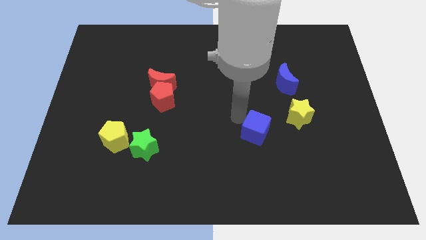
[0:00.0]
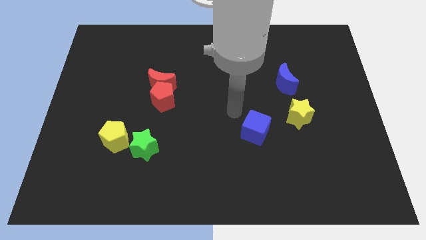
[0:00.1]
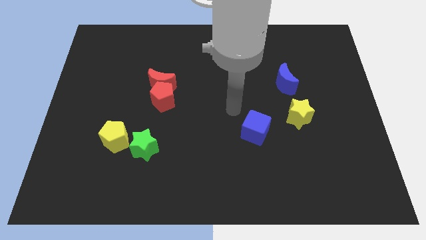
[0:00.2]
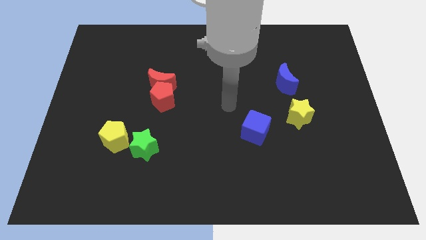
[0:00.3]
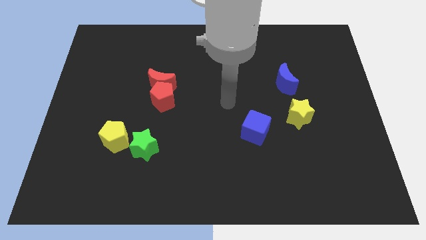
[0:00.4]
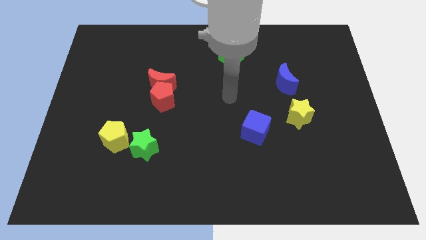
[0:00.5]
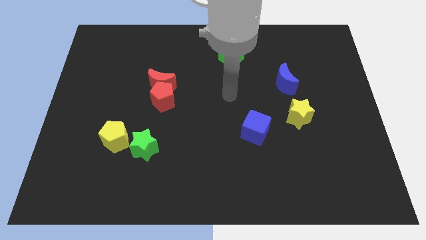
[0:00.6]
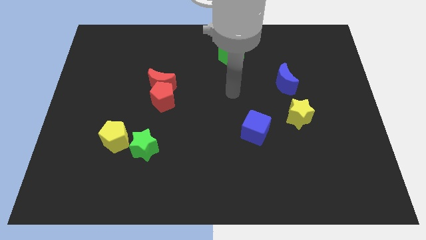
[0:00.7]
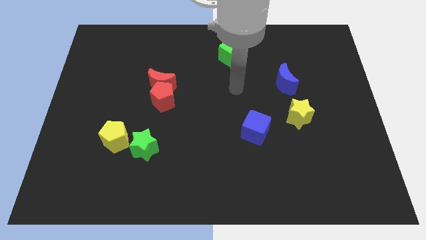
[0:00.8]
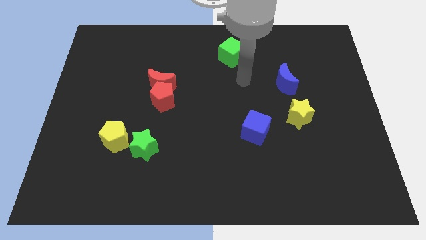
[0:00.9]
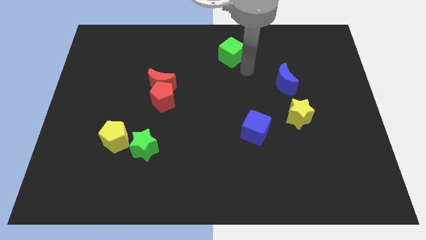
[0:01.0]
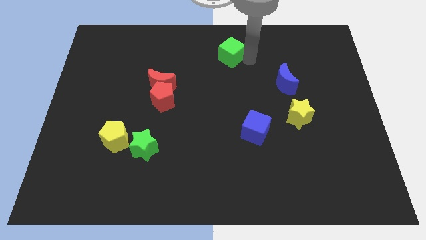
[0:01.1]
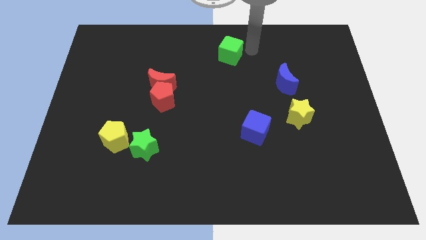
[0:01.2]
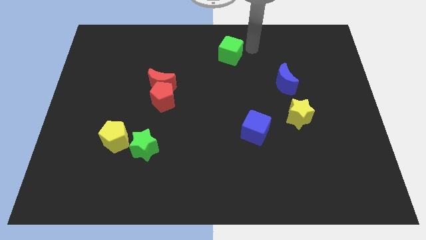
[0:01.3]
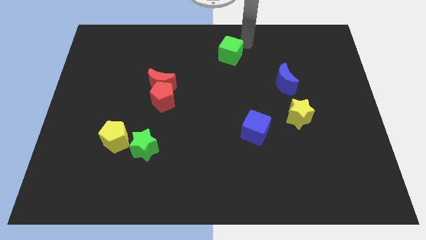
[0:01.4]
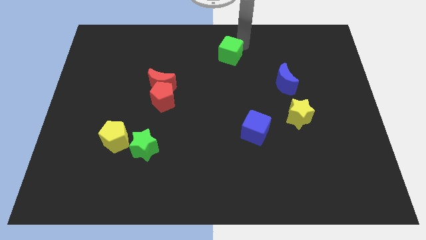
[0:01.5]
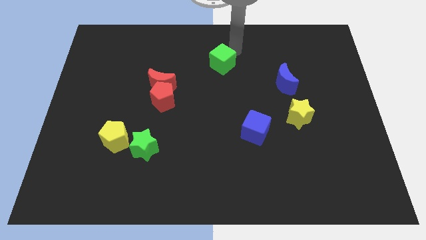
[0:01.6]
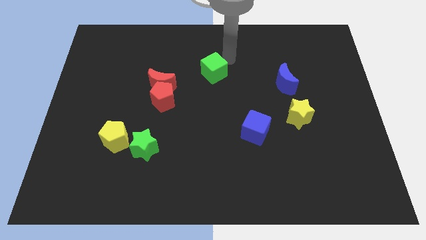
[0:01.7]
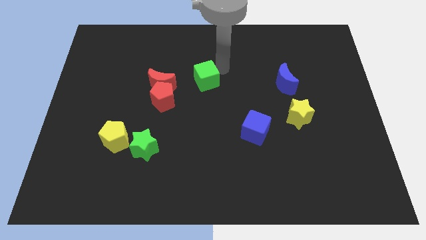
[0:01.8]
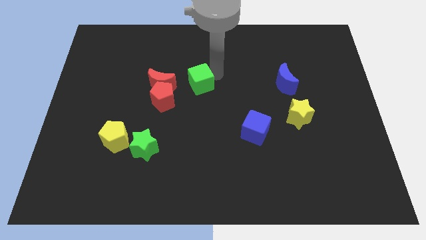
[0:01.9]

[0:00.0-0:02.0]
push the green cube towards the red blocks

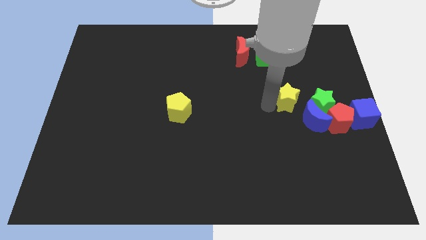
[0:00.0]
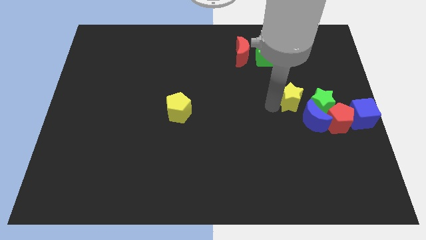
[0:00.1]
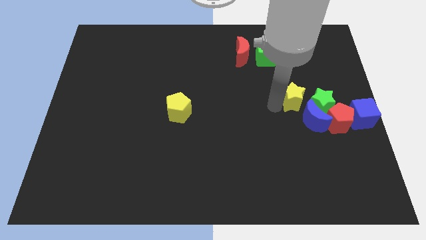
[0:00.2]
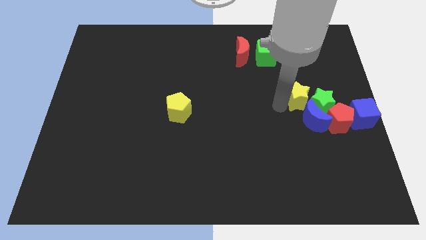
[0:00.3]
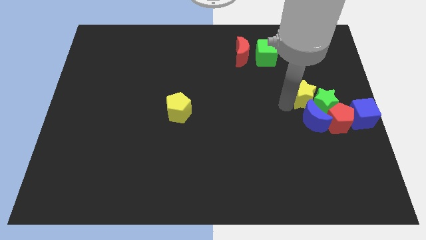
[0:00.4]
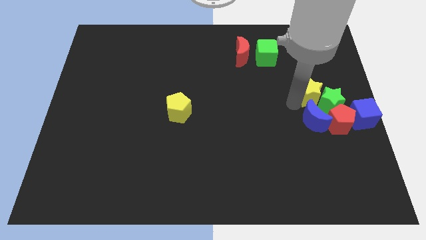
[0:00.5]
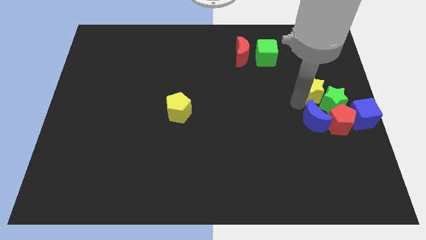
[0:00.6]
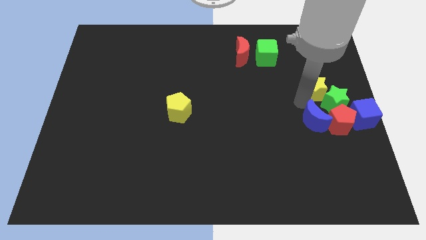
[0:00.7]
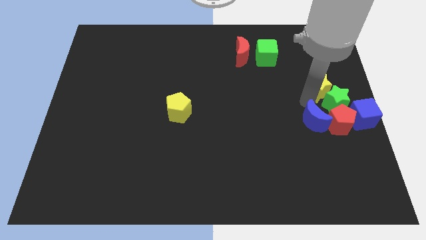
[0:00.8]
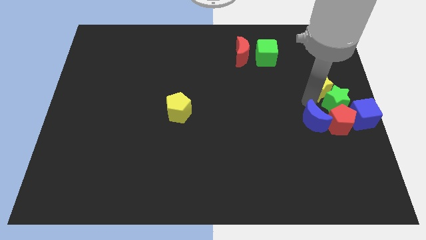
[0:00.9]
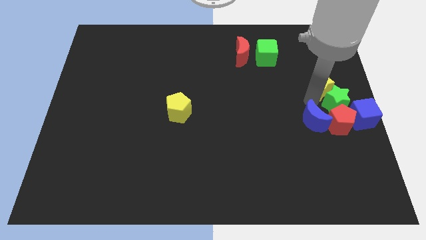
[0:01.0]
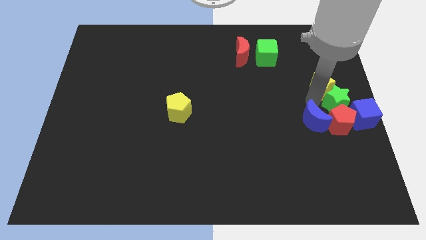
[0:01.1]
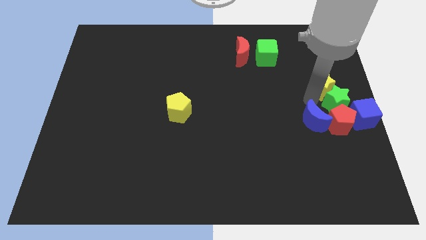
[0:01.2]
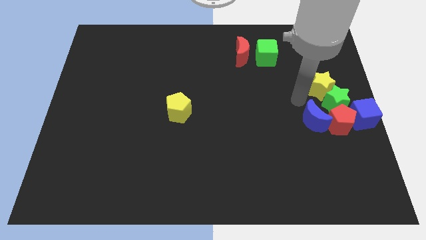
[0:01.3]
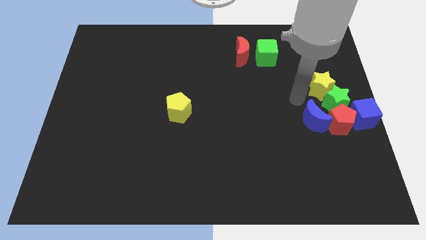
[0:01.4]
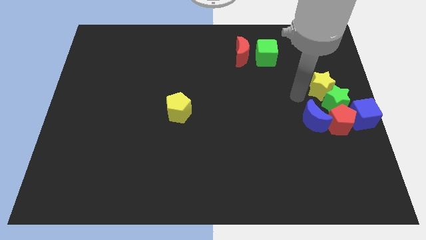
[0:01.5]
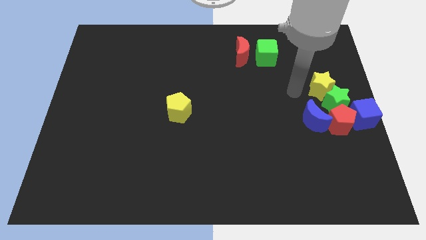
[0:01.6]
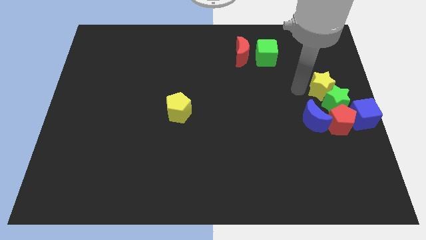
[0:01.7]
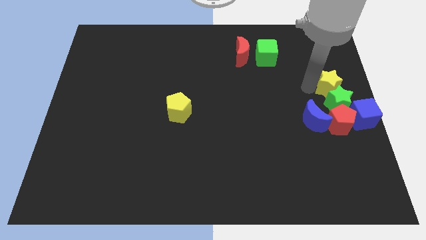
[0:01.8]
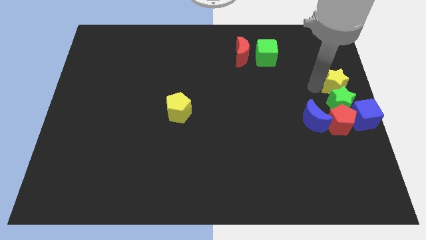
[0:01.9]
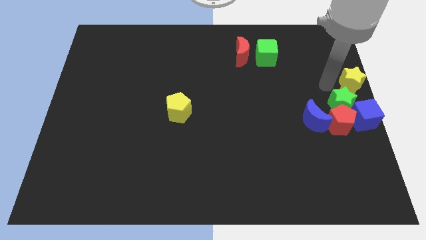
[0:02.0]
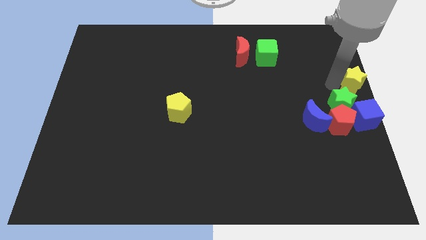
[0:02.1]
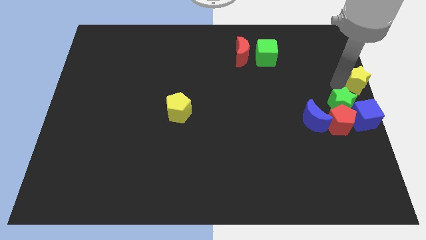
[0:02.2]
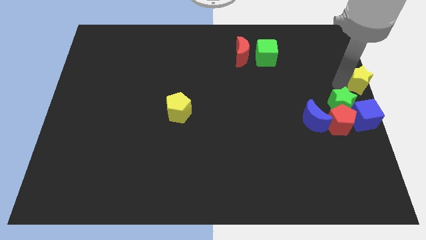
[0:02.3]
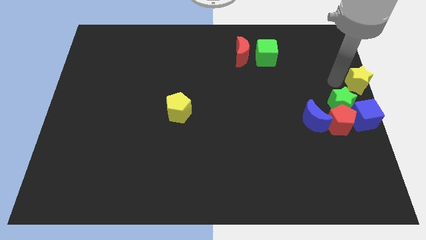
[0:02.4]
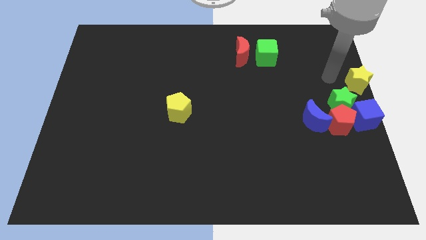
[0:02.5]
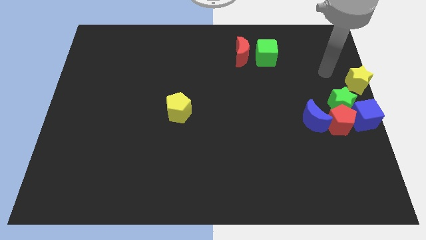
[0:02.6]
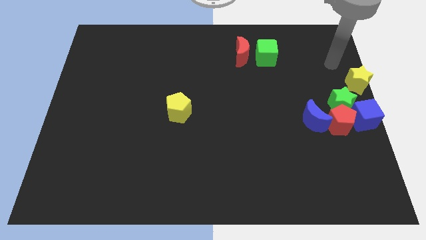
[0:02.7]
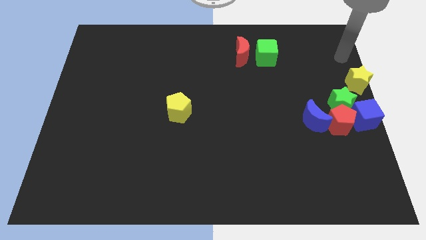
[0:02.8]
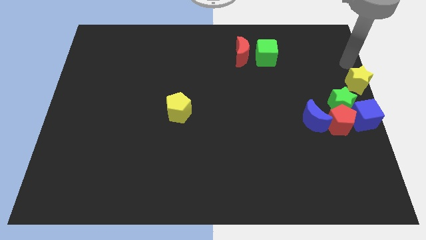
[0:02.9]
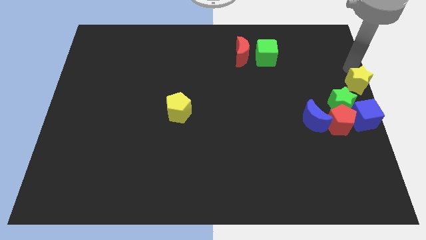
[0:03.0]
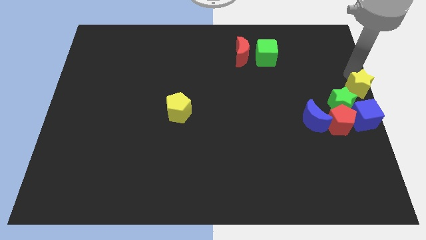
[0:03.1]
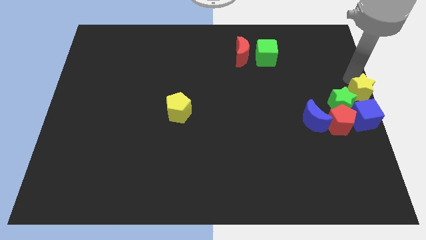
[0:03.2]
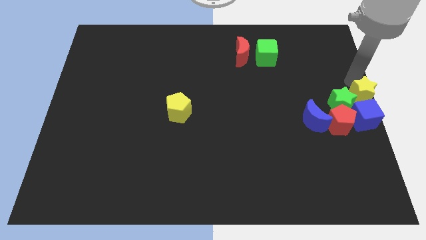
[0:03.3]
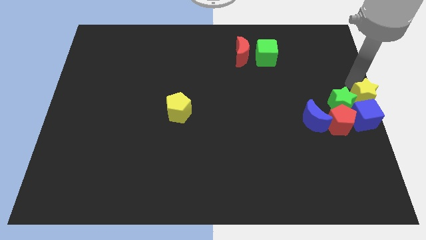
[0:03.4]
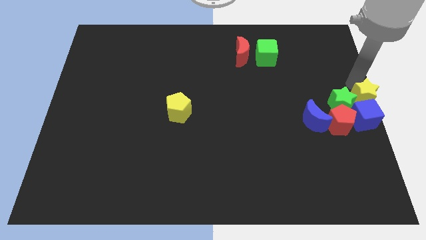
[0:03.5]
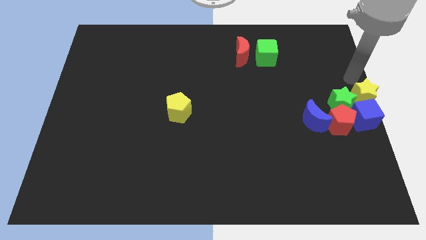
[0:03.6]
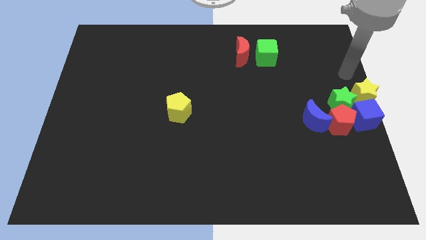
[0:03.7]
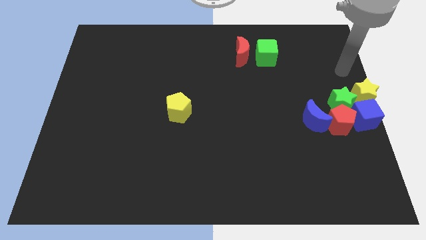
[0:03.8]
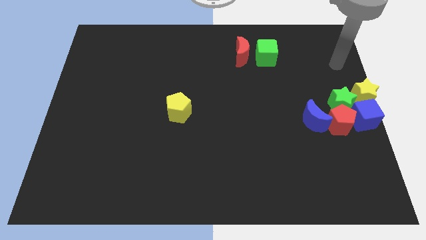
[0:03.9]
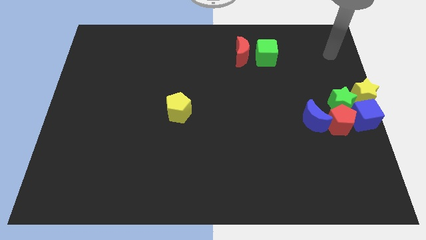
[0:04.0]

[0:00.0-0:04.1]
place yellow star above blue cube

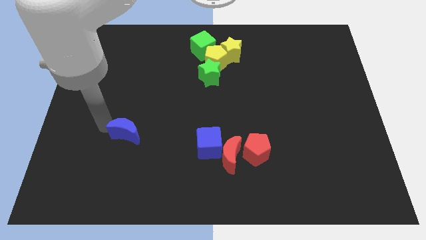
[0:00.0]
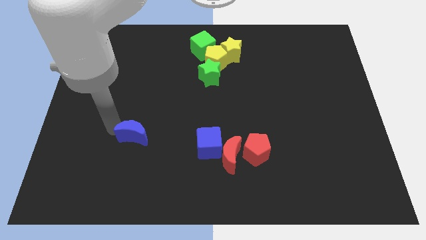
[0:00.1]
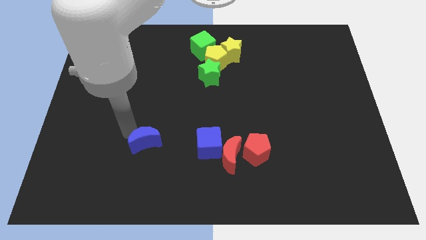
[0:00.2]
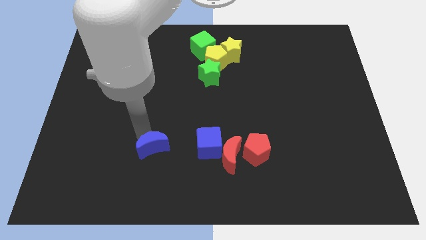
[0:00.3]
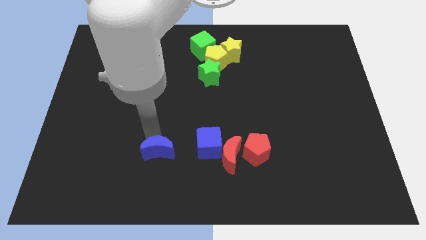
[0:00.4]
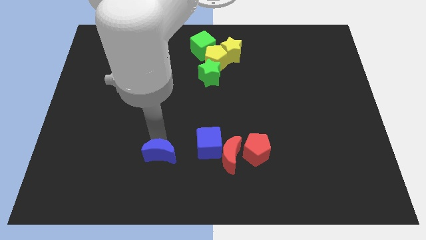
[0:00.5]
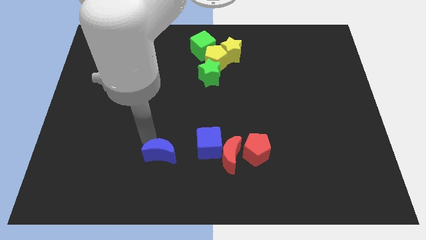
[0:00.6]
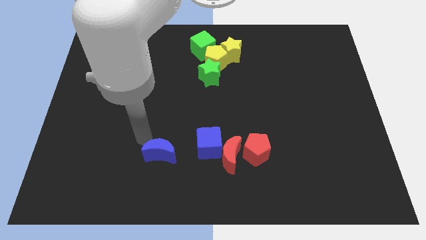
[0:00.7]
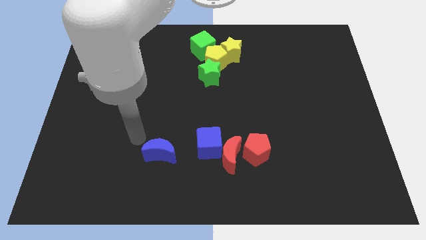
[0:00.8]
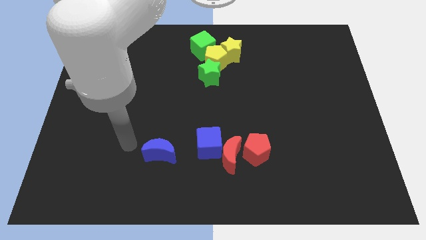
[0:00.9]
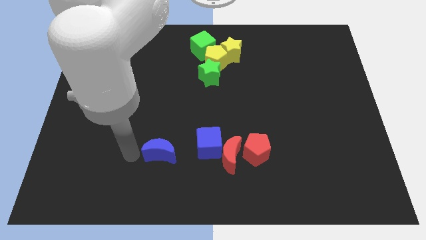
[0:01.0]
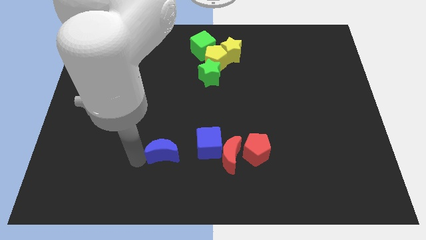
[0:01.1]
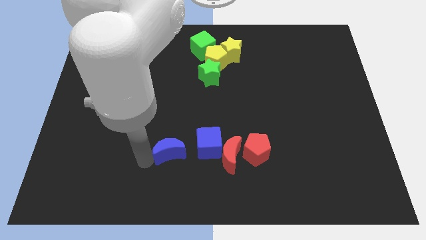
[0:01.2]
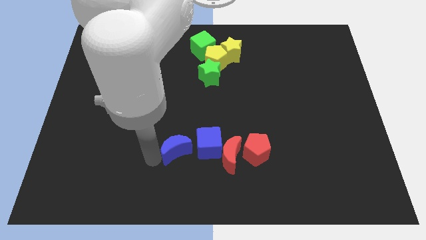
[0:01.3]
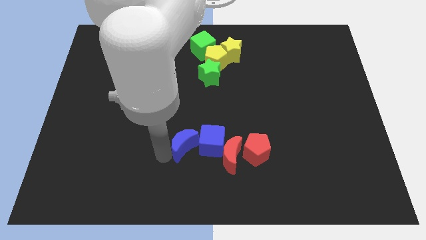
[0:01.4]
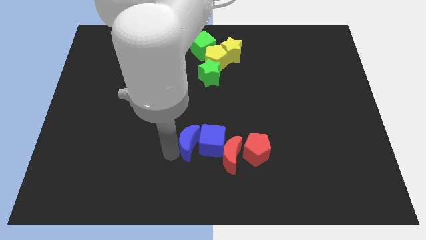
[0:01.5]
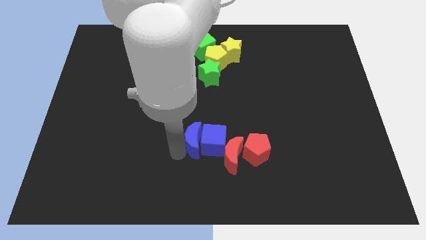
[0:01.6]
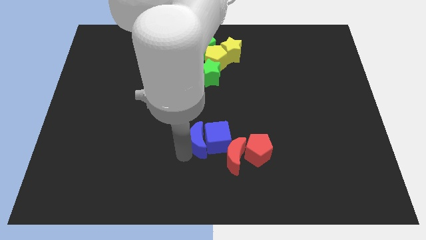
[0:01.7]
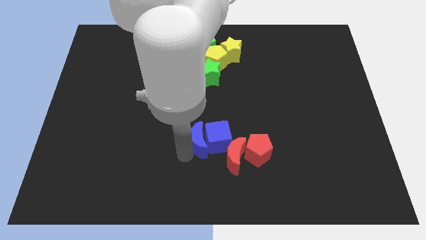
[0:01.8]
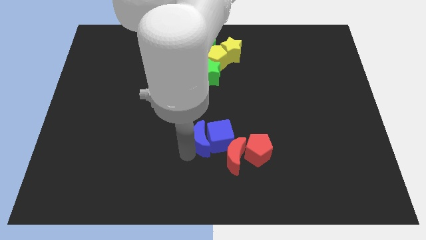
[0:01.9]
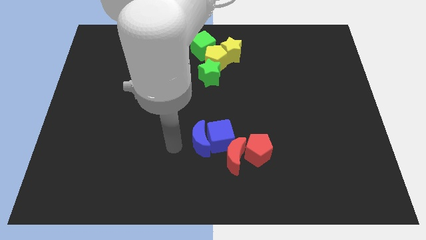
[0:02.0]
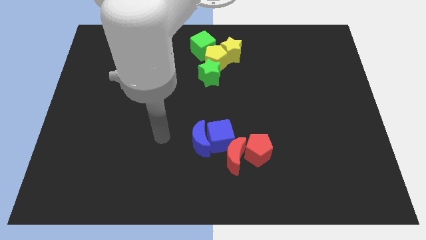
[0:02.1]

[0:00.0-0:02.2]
move the blue moon into the blue cube

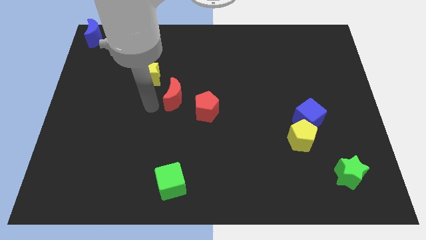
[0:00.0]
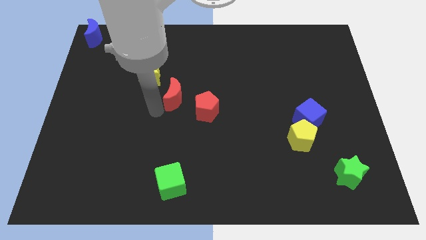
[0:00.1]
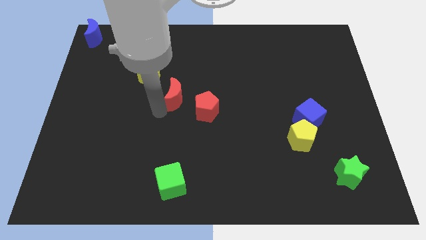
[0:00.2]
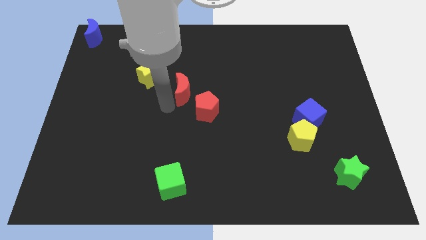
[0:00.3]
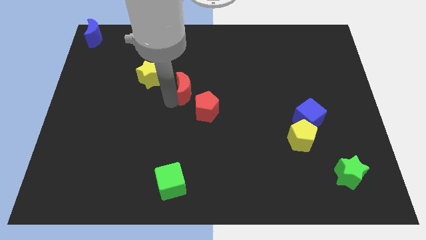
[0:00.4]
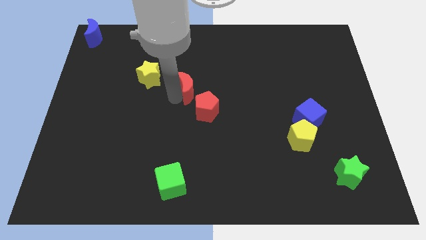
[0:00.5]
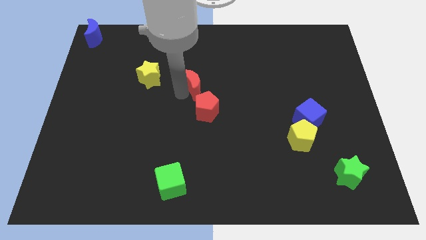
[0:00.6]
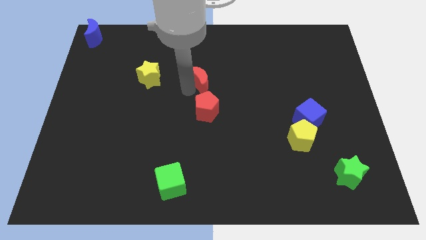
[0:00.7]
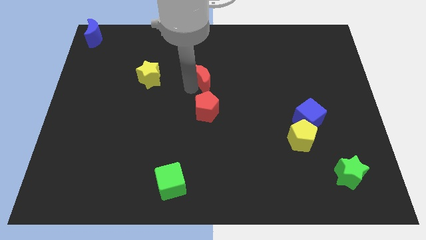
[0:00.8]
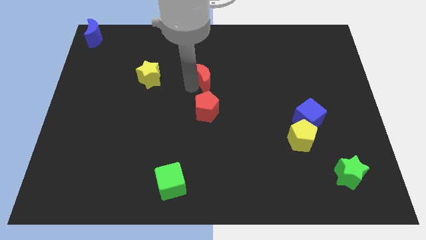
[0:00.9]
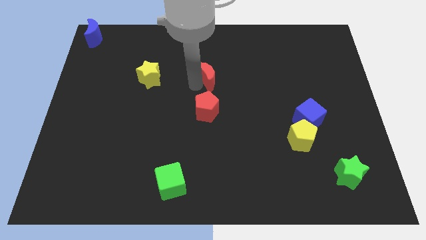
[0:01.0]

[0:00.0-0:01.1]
push the red crescent to the top of the red pentagon
